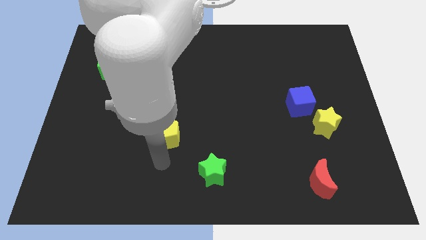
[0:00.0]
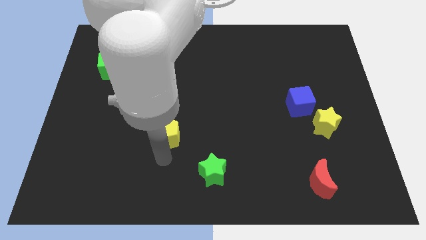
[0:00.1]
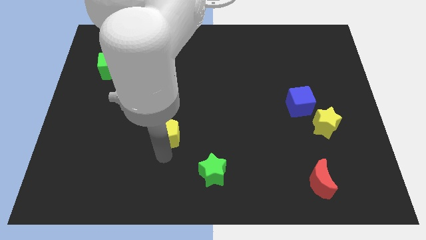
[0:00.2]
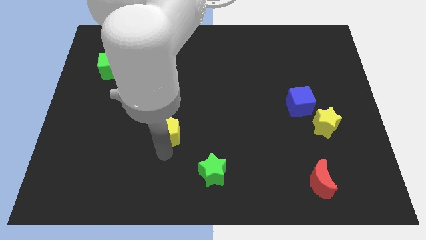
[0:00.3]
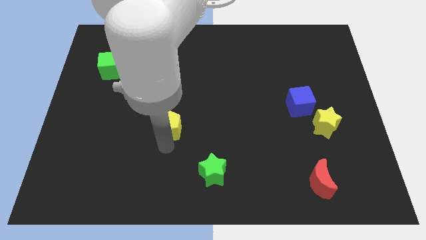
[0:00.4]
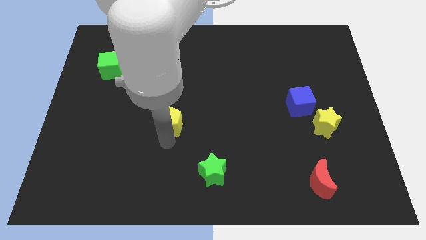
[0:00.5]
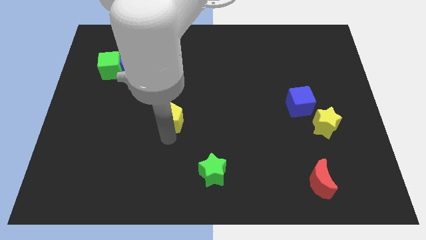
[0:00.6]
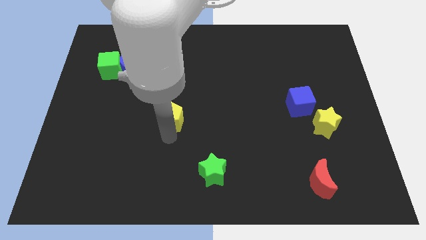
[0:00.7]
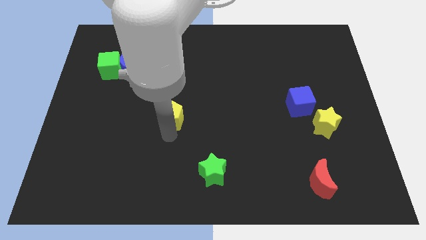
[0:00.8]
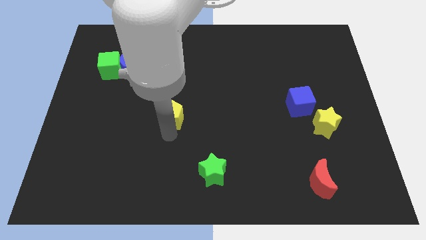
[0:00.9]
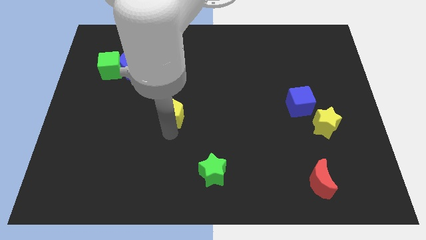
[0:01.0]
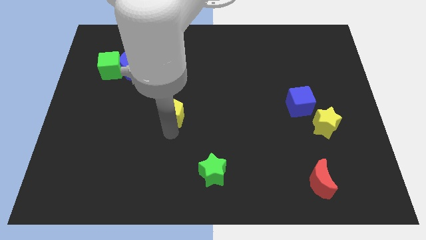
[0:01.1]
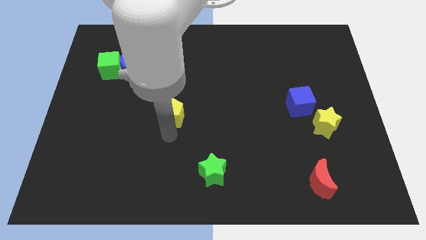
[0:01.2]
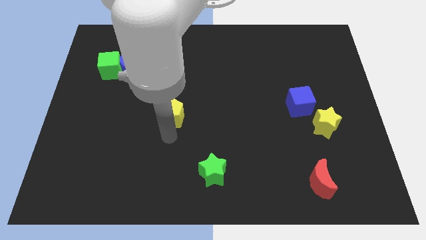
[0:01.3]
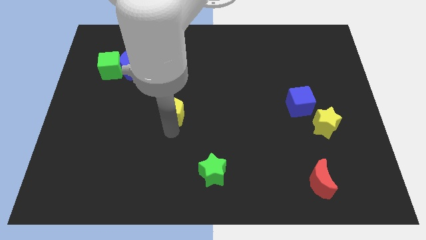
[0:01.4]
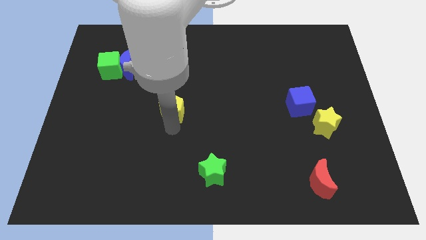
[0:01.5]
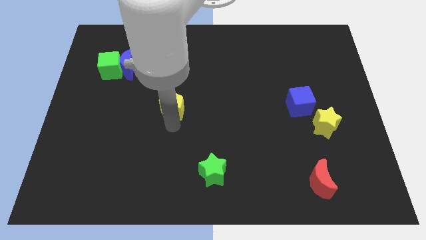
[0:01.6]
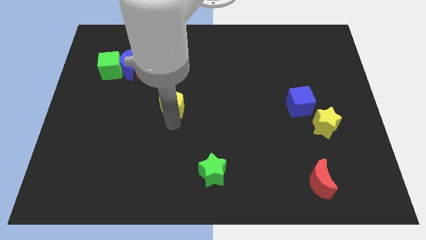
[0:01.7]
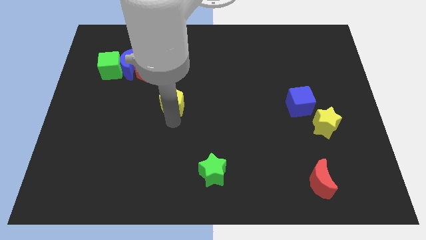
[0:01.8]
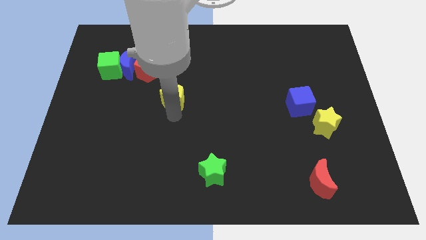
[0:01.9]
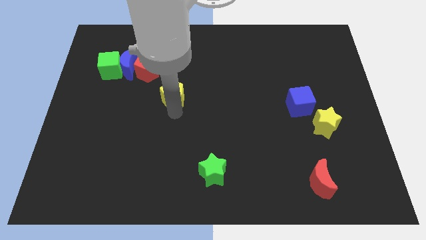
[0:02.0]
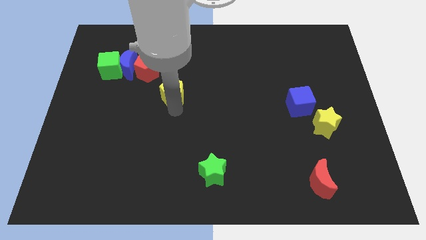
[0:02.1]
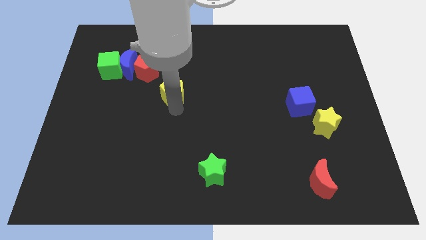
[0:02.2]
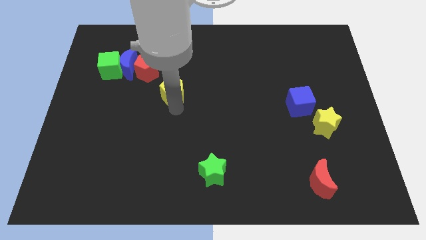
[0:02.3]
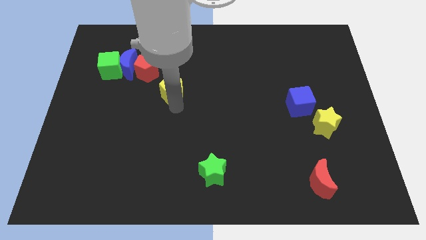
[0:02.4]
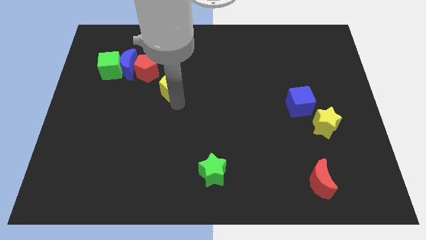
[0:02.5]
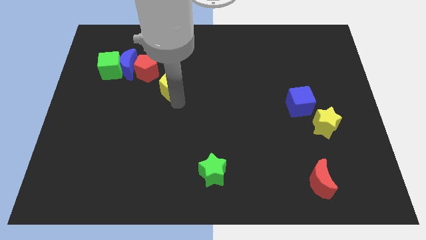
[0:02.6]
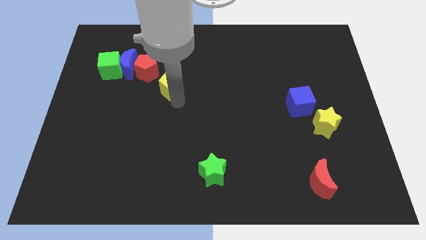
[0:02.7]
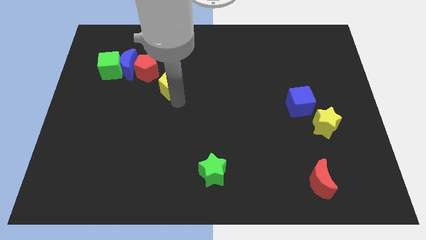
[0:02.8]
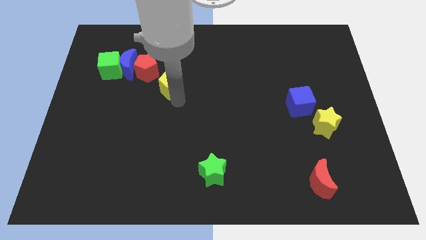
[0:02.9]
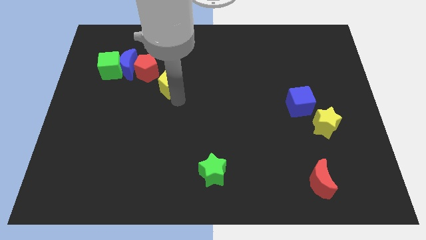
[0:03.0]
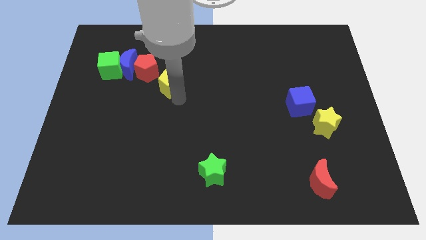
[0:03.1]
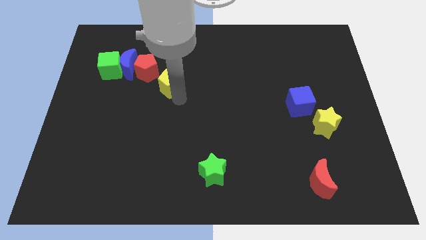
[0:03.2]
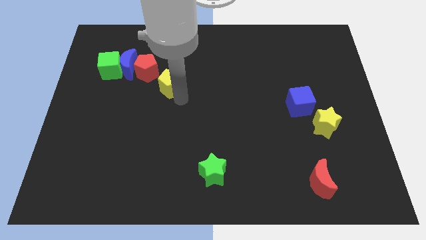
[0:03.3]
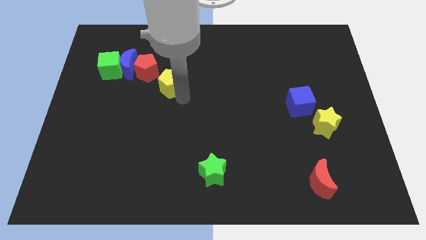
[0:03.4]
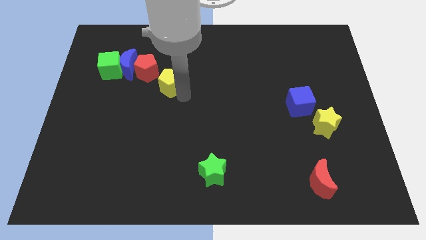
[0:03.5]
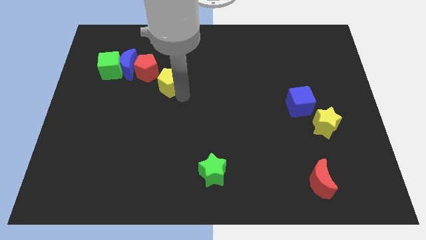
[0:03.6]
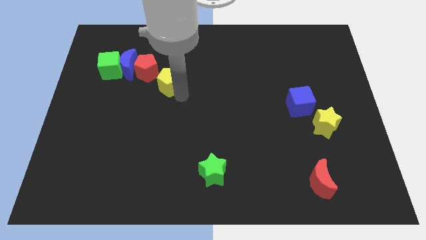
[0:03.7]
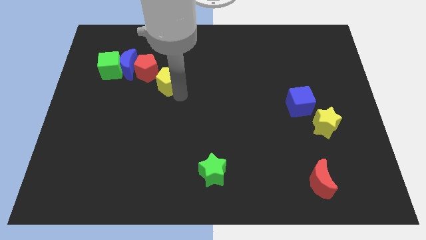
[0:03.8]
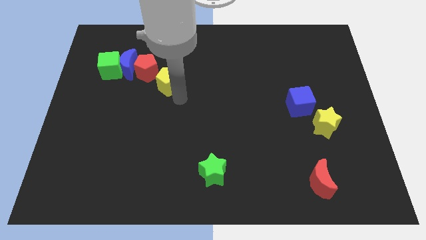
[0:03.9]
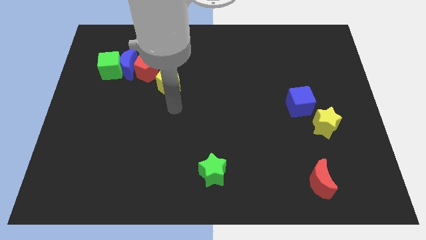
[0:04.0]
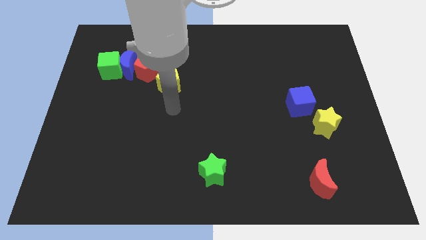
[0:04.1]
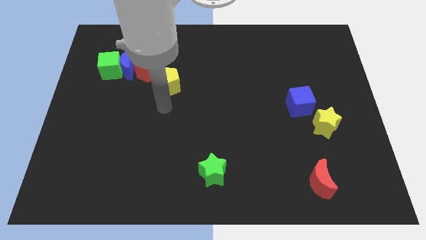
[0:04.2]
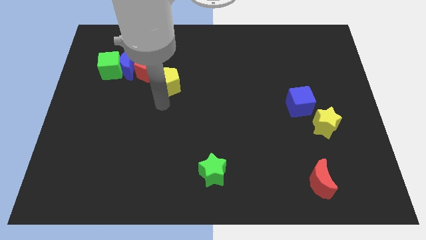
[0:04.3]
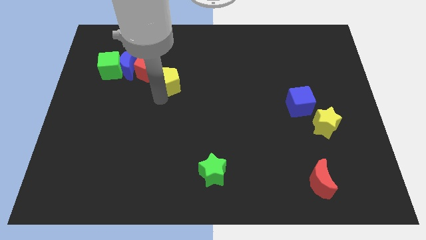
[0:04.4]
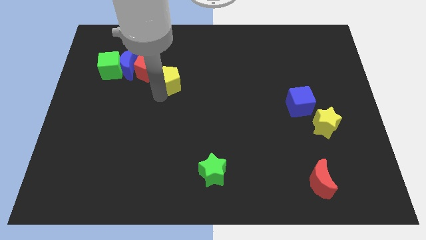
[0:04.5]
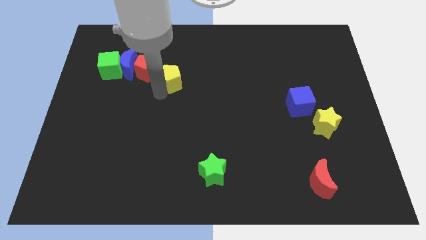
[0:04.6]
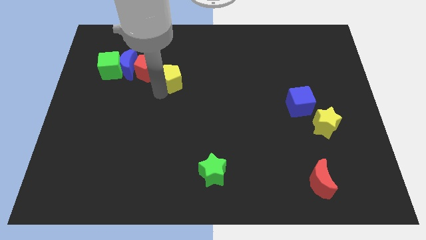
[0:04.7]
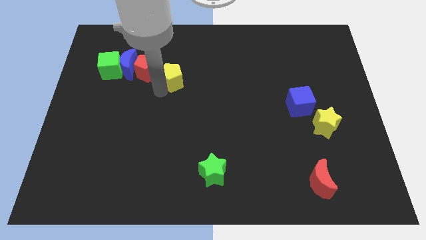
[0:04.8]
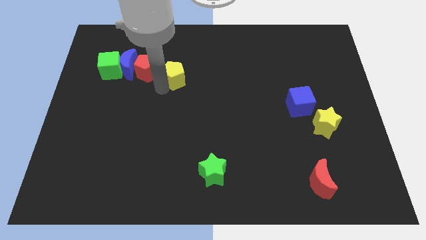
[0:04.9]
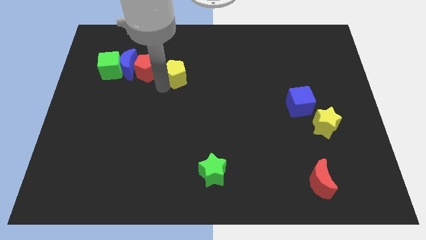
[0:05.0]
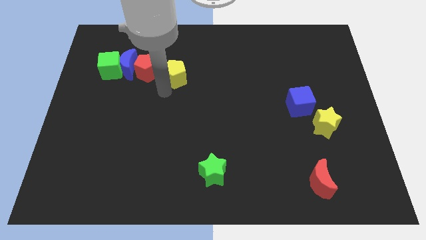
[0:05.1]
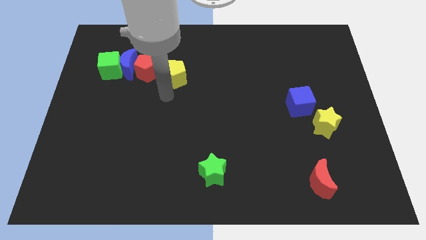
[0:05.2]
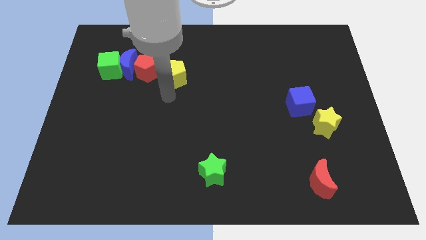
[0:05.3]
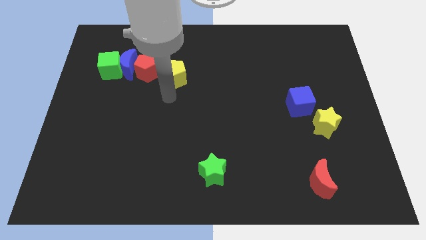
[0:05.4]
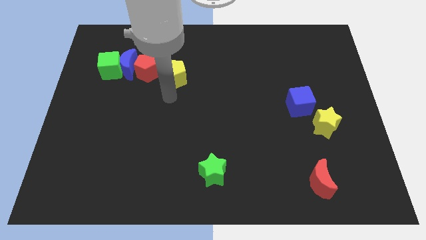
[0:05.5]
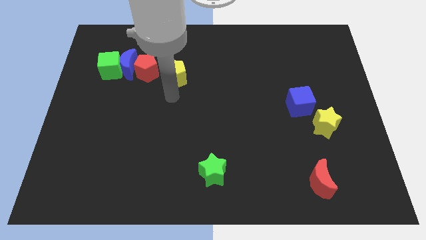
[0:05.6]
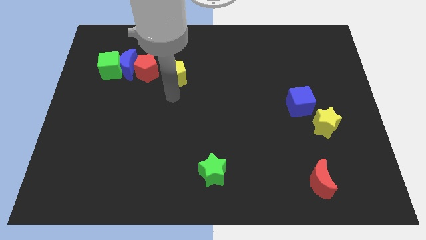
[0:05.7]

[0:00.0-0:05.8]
move the yellow pentagon to the right of the red pentagon

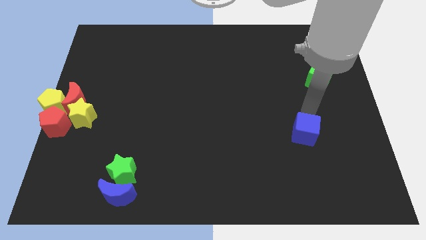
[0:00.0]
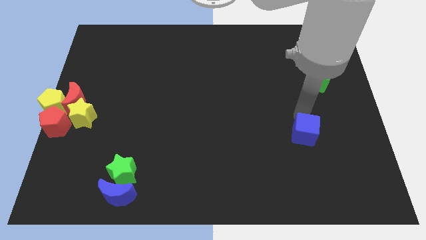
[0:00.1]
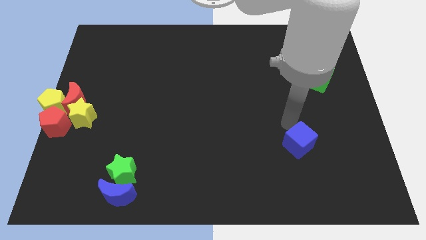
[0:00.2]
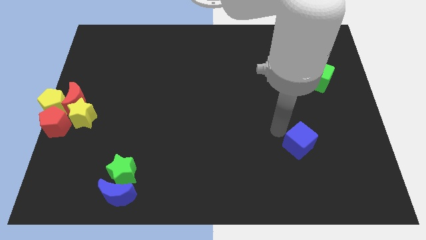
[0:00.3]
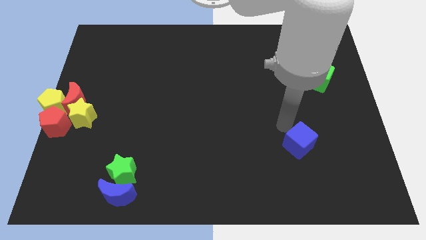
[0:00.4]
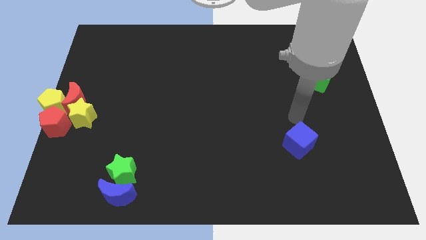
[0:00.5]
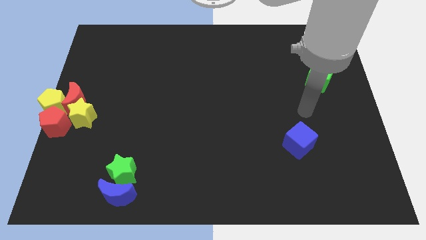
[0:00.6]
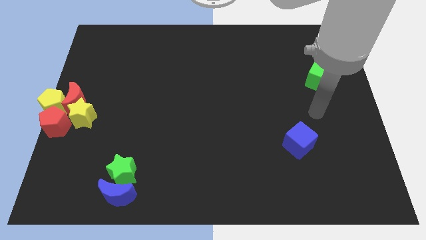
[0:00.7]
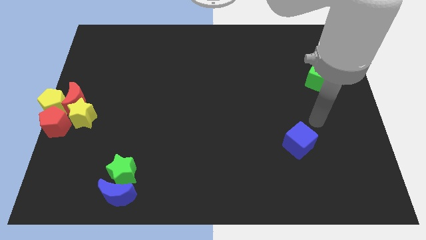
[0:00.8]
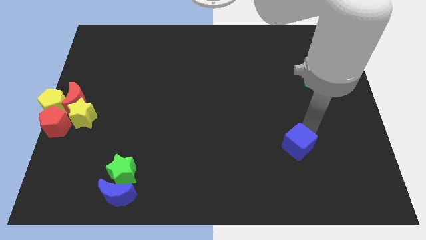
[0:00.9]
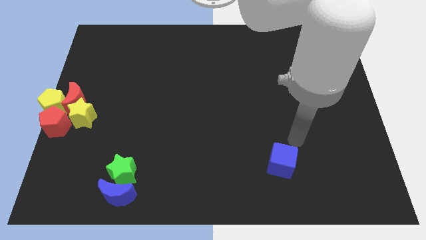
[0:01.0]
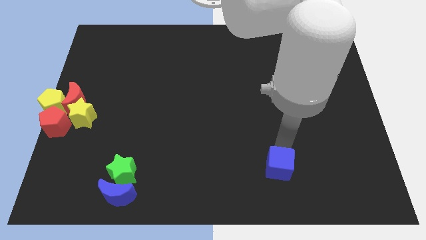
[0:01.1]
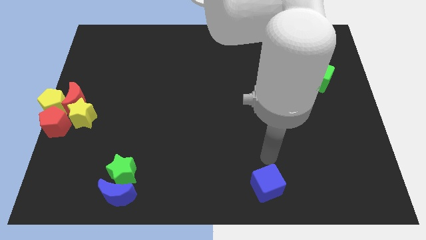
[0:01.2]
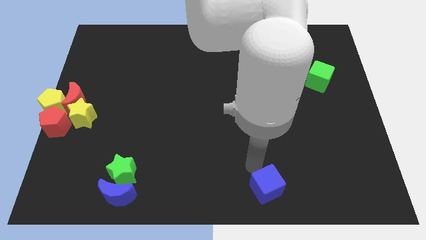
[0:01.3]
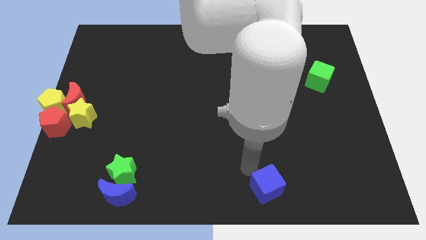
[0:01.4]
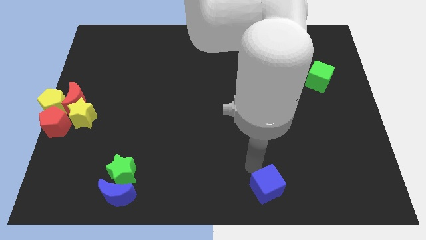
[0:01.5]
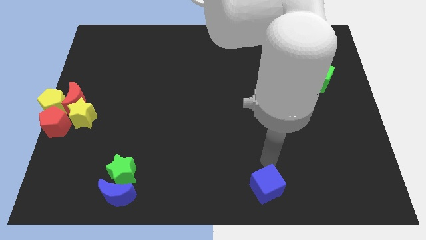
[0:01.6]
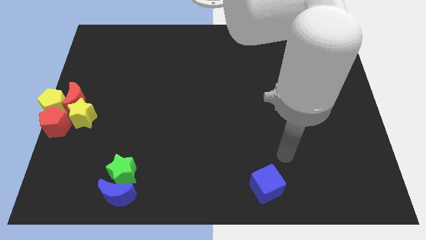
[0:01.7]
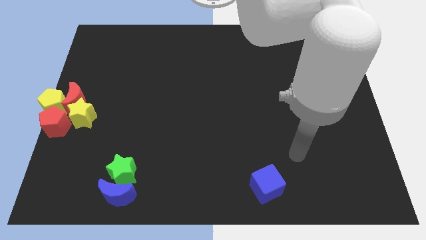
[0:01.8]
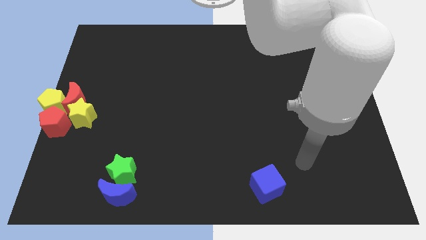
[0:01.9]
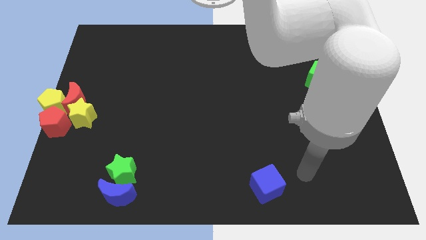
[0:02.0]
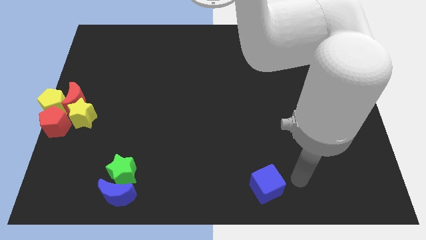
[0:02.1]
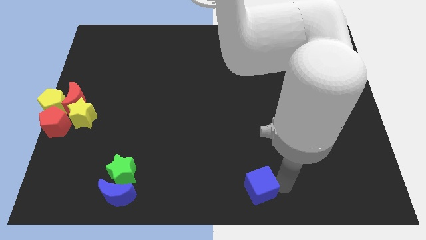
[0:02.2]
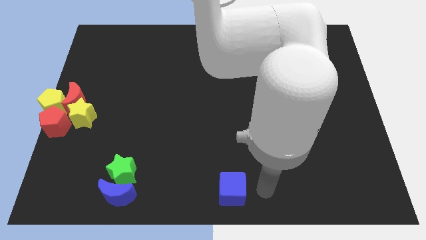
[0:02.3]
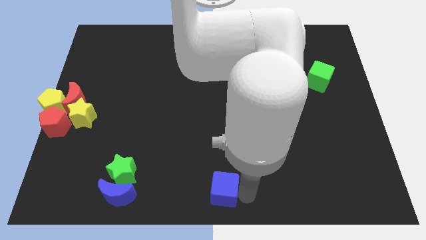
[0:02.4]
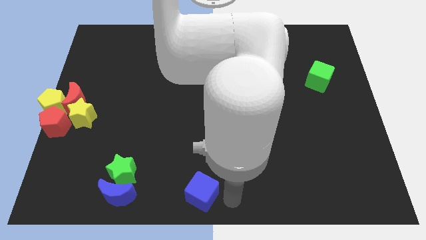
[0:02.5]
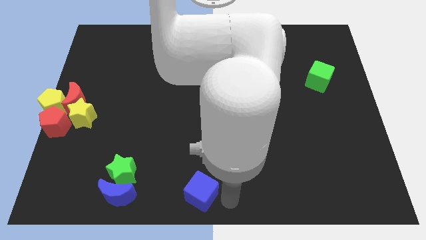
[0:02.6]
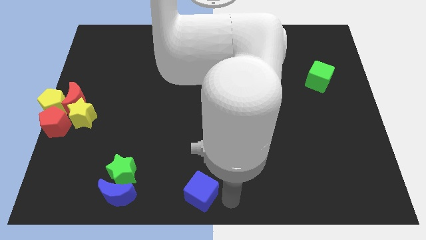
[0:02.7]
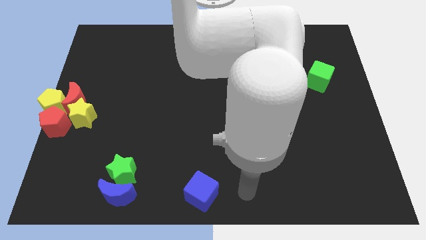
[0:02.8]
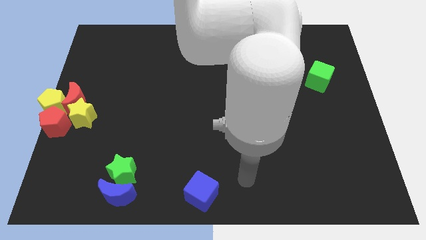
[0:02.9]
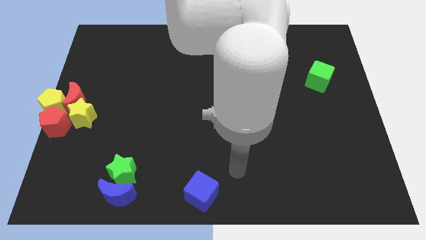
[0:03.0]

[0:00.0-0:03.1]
place the blue cube at the bottom center of the table
